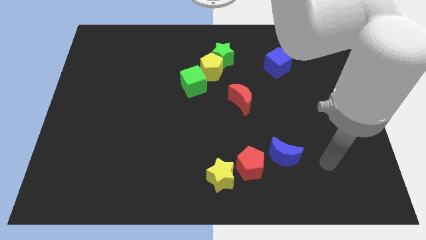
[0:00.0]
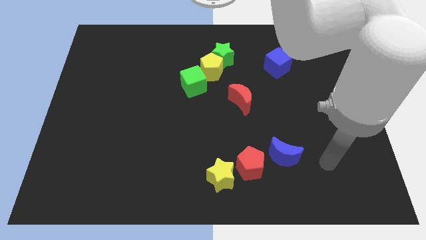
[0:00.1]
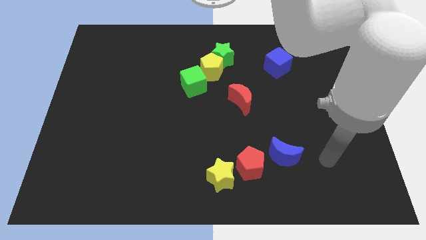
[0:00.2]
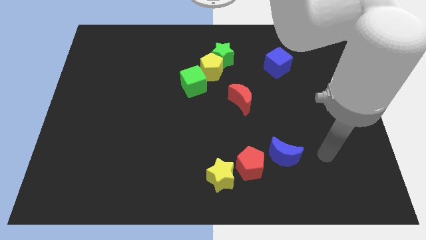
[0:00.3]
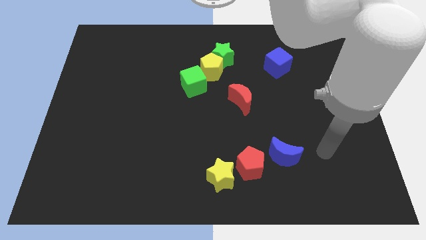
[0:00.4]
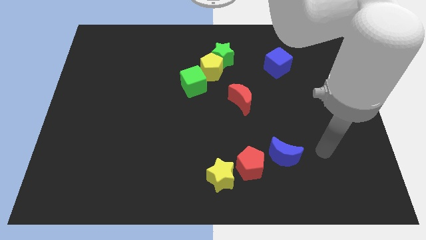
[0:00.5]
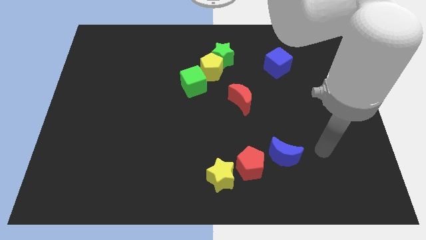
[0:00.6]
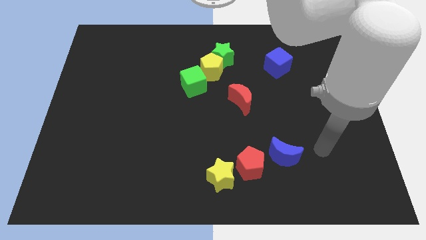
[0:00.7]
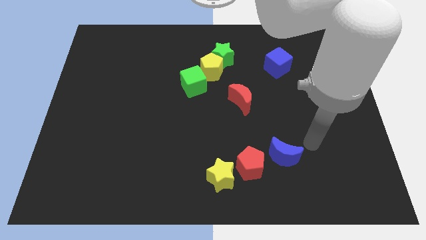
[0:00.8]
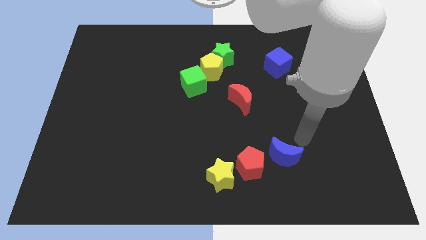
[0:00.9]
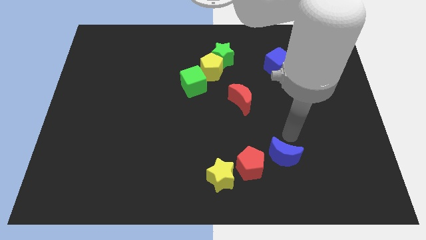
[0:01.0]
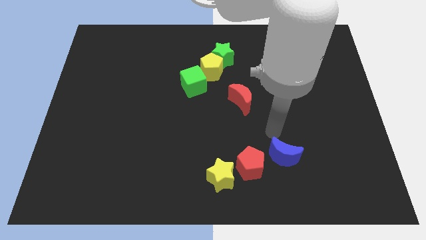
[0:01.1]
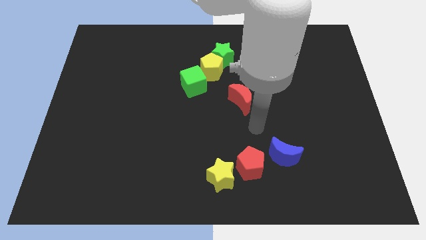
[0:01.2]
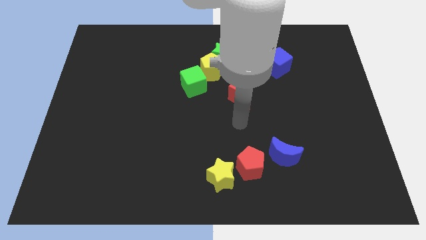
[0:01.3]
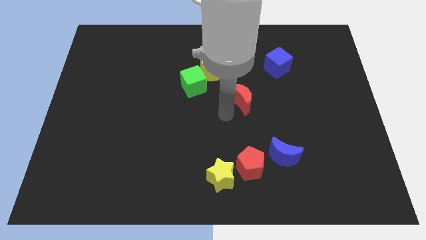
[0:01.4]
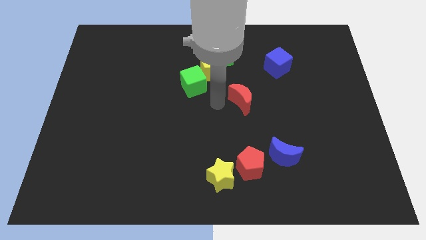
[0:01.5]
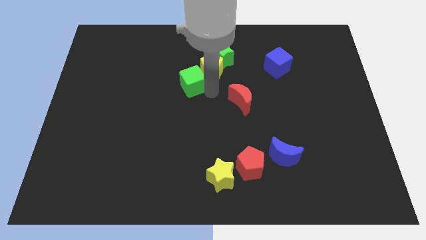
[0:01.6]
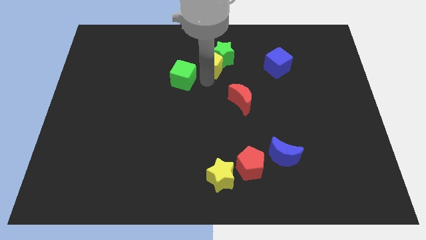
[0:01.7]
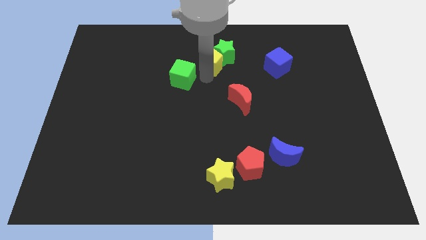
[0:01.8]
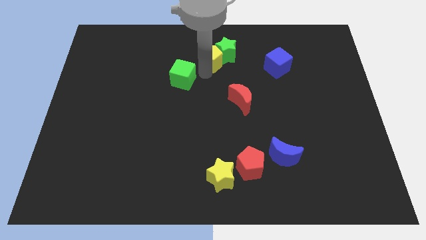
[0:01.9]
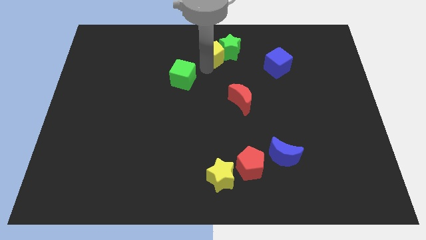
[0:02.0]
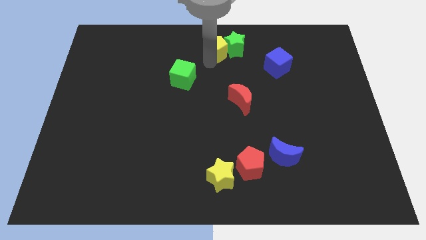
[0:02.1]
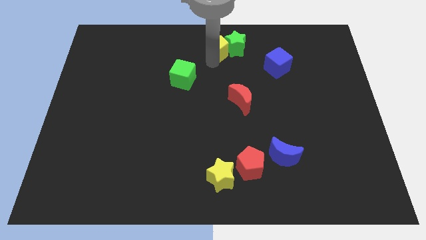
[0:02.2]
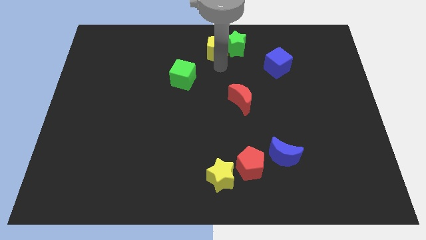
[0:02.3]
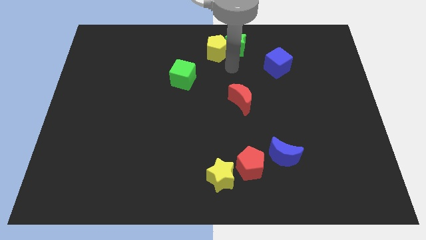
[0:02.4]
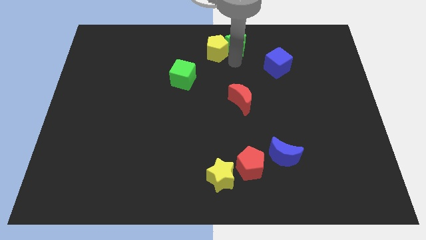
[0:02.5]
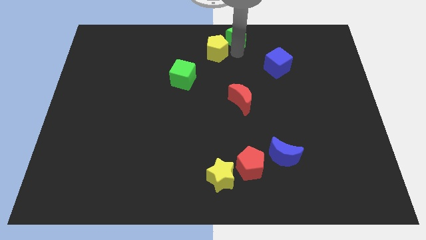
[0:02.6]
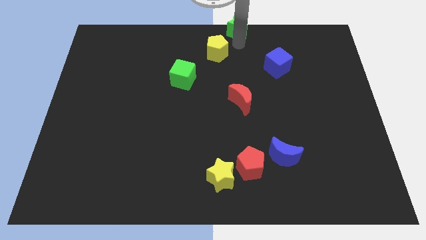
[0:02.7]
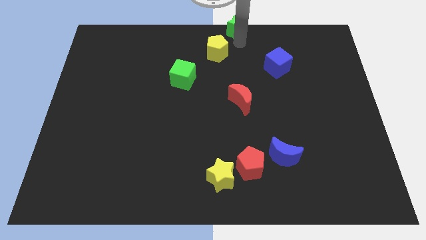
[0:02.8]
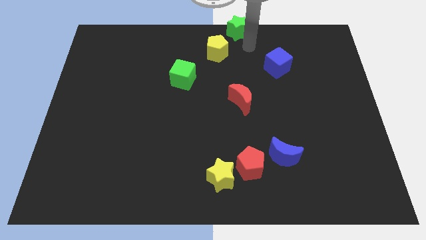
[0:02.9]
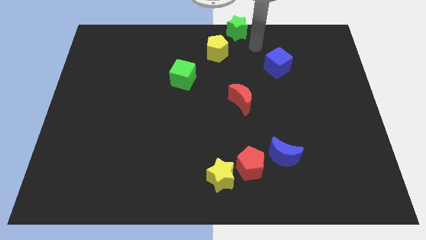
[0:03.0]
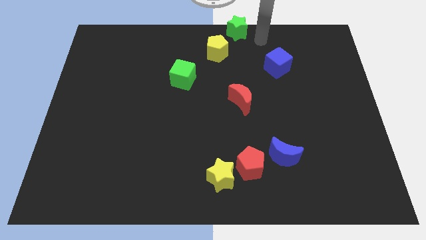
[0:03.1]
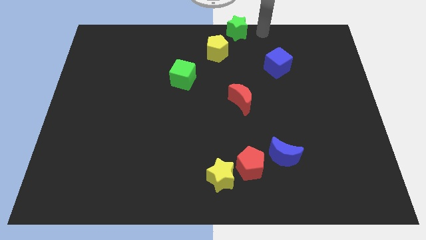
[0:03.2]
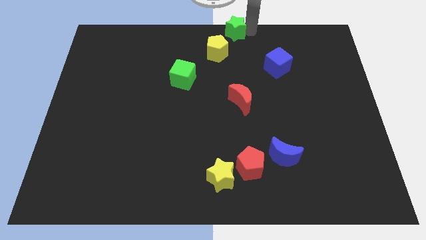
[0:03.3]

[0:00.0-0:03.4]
move the green star to the top center of the board

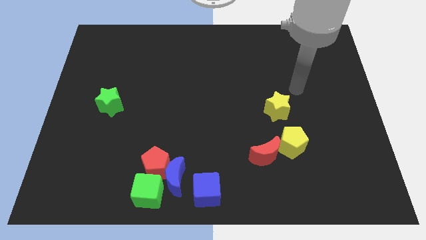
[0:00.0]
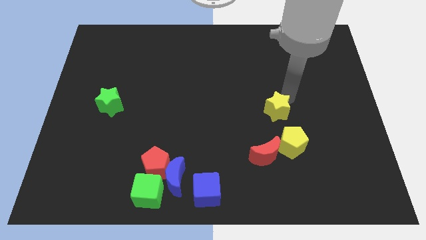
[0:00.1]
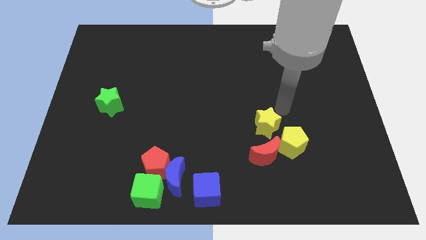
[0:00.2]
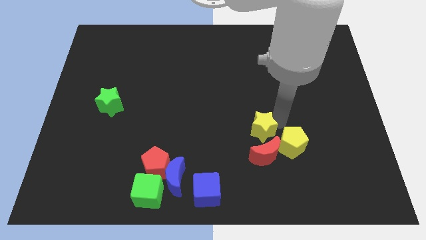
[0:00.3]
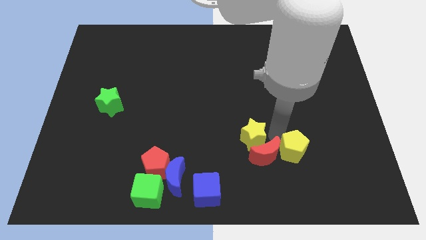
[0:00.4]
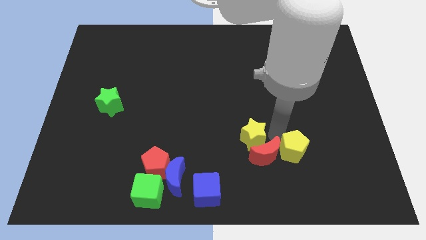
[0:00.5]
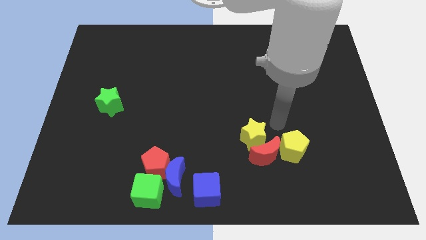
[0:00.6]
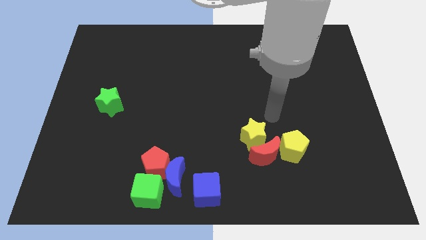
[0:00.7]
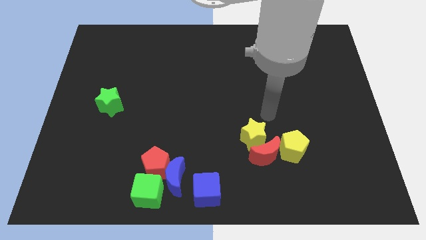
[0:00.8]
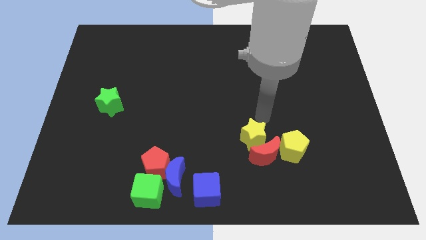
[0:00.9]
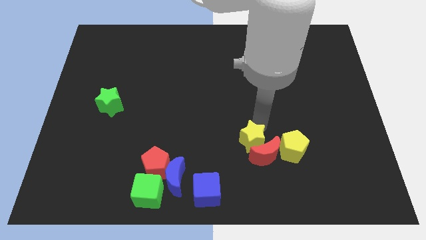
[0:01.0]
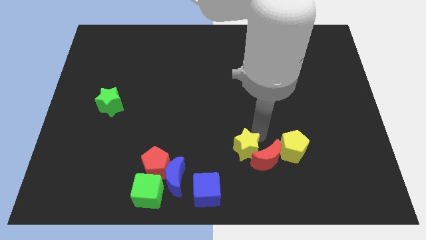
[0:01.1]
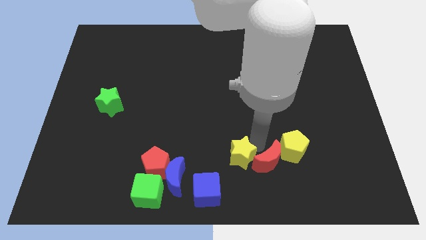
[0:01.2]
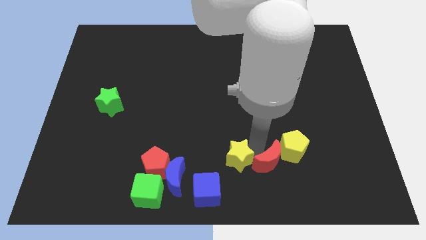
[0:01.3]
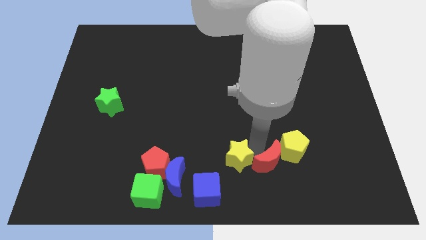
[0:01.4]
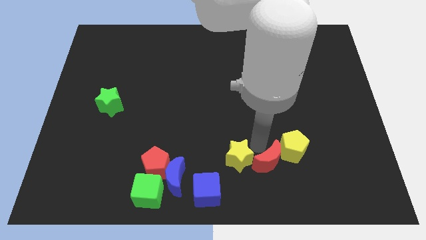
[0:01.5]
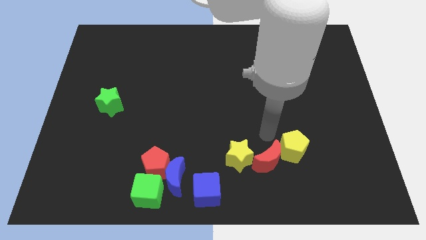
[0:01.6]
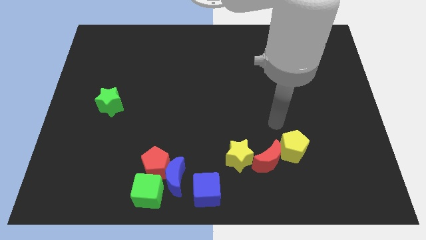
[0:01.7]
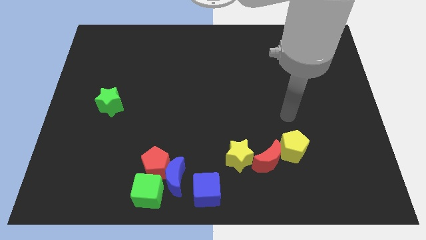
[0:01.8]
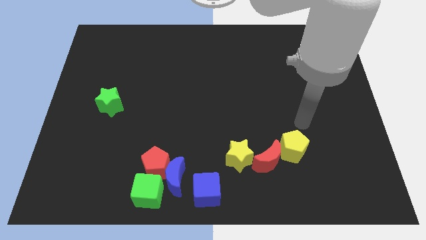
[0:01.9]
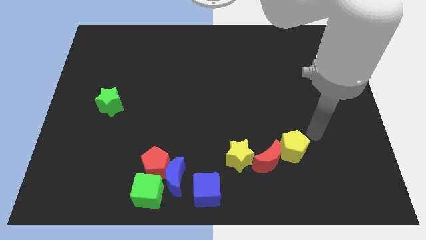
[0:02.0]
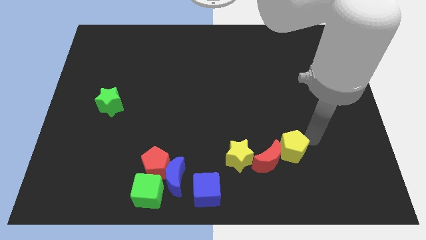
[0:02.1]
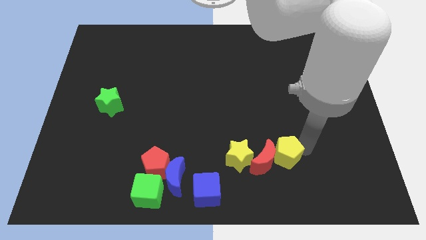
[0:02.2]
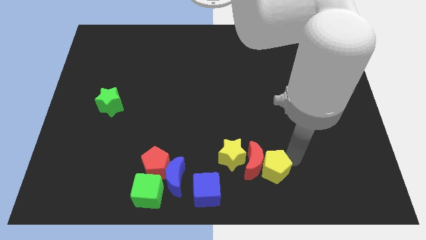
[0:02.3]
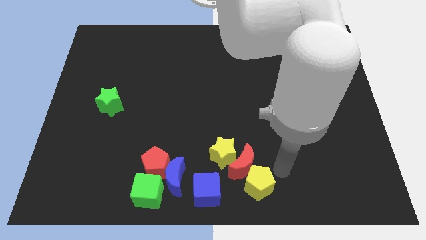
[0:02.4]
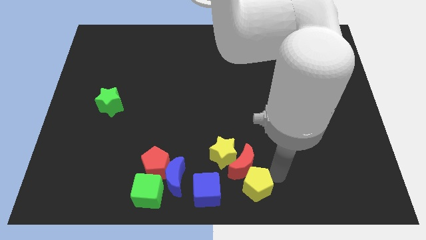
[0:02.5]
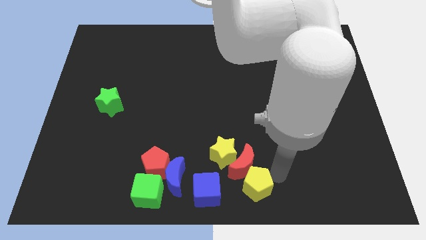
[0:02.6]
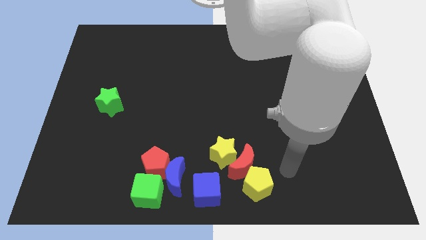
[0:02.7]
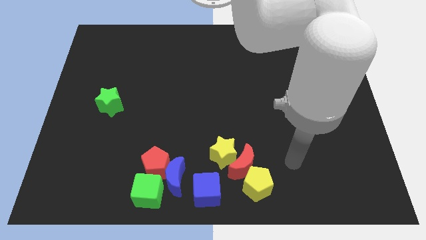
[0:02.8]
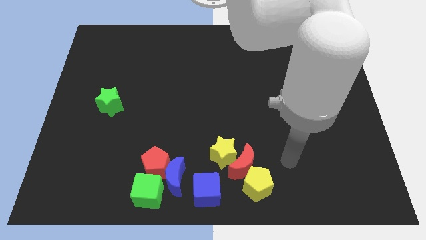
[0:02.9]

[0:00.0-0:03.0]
push the yellow blocks and red moon to the bottom center

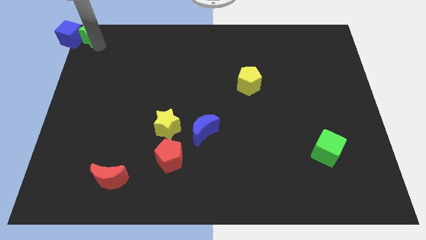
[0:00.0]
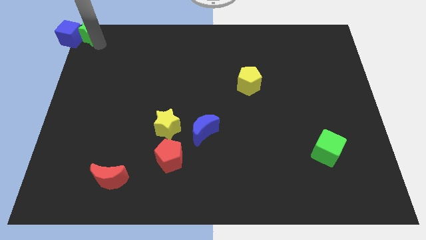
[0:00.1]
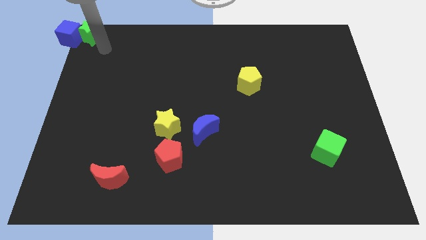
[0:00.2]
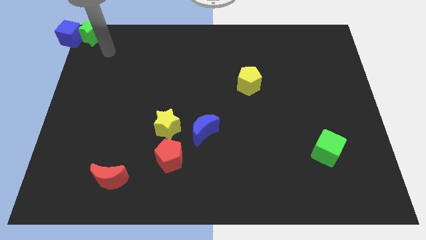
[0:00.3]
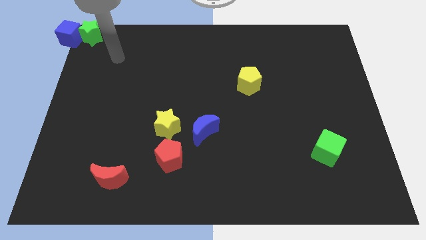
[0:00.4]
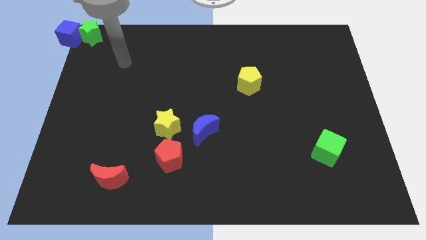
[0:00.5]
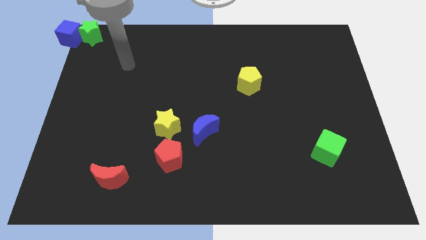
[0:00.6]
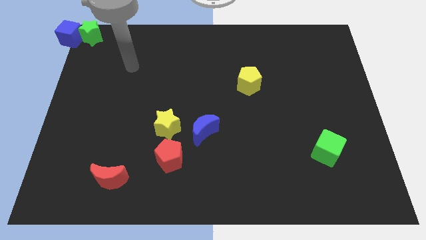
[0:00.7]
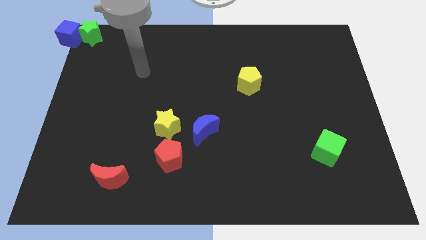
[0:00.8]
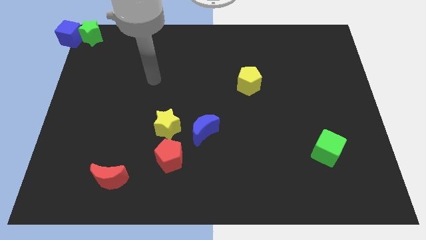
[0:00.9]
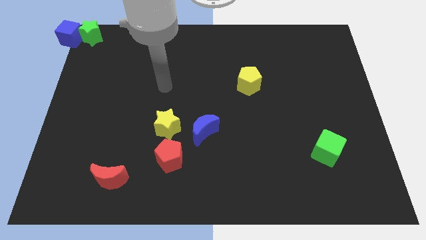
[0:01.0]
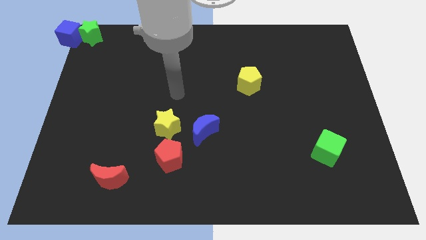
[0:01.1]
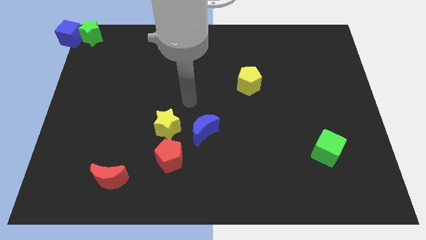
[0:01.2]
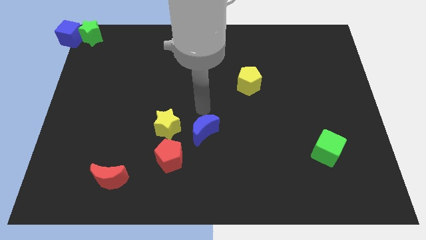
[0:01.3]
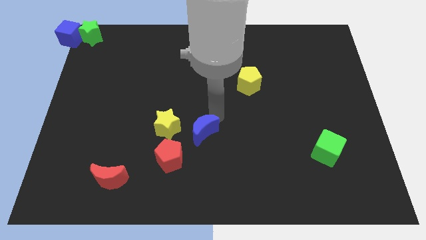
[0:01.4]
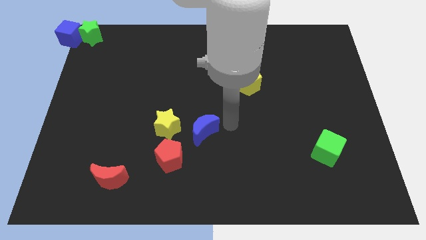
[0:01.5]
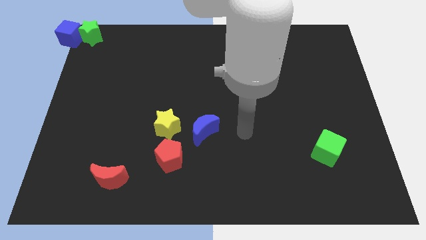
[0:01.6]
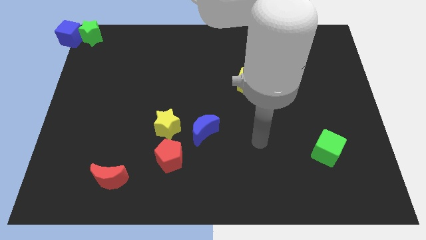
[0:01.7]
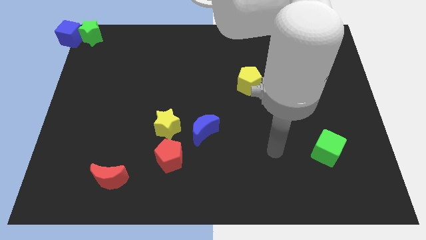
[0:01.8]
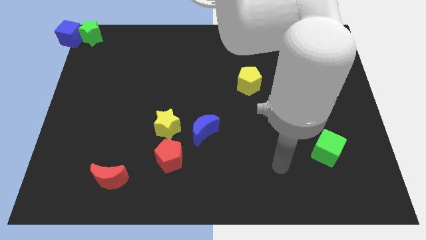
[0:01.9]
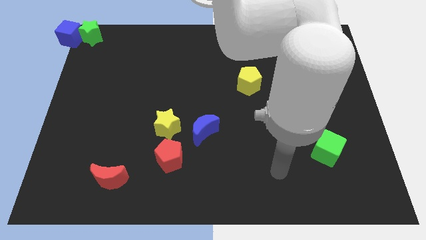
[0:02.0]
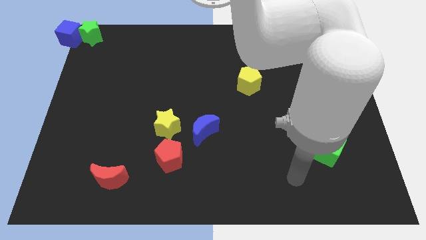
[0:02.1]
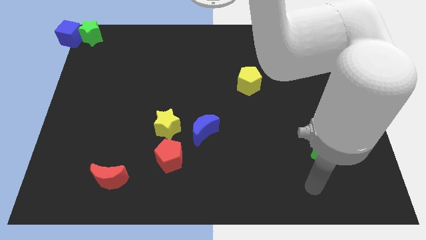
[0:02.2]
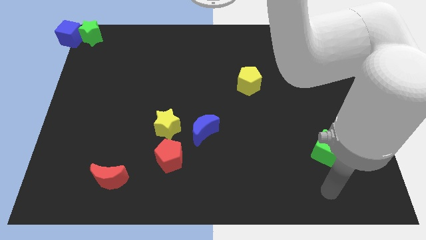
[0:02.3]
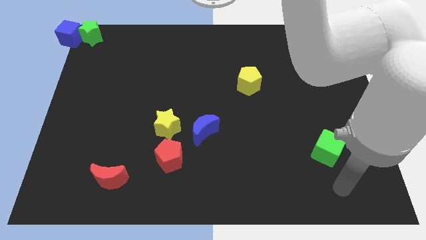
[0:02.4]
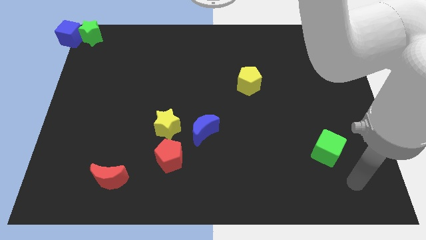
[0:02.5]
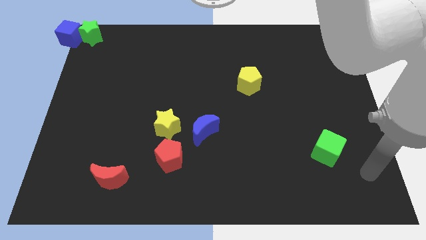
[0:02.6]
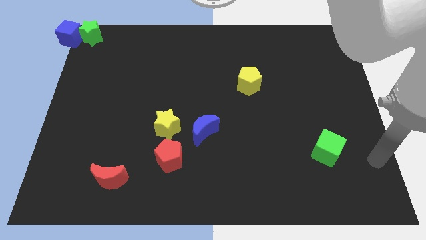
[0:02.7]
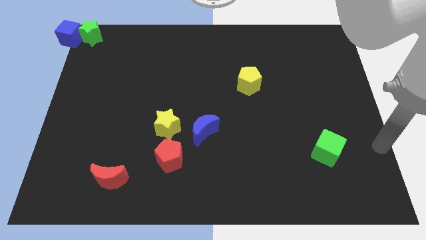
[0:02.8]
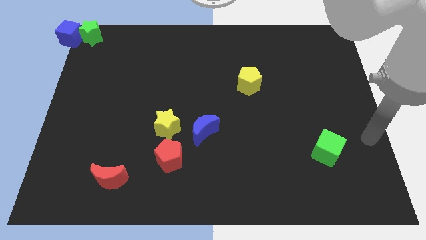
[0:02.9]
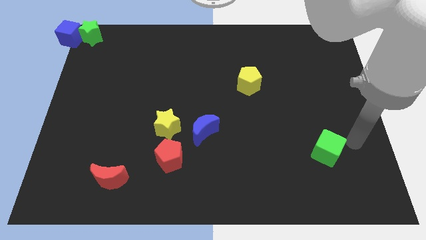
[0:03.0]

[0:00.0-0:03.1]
move arm close to the green cube
